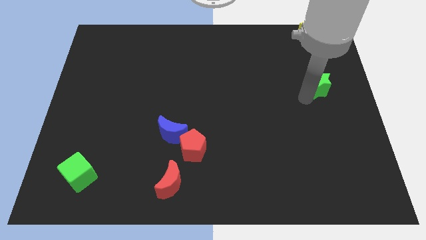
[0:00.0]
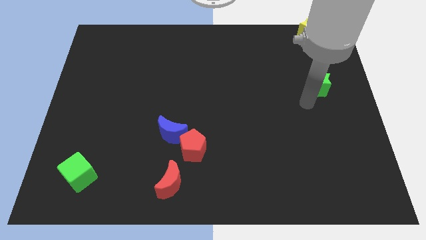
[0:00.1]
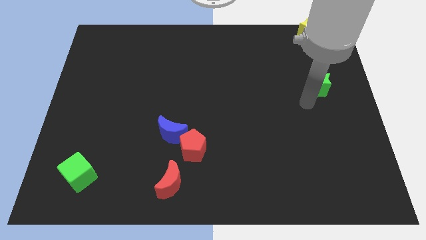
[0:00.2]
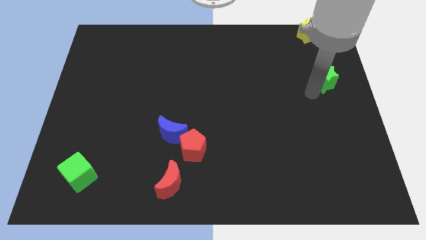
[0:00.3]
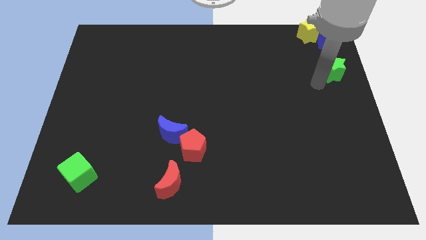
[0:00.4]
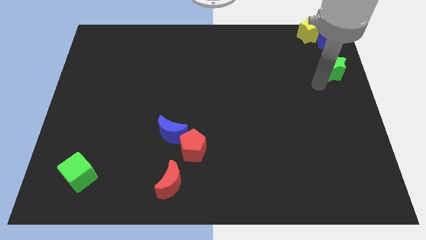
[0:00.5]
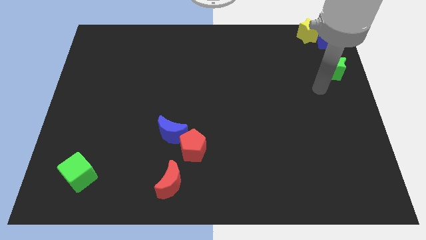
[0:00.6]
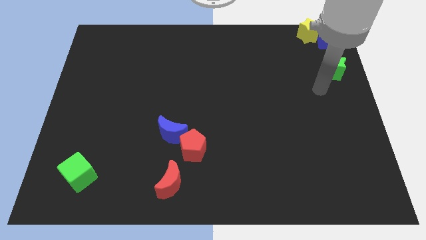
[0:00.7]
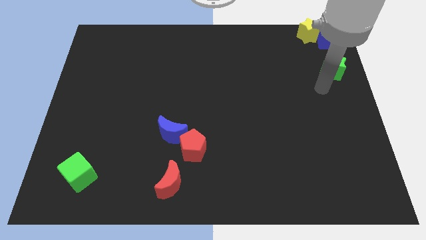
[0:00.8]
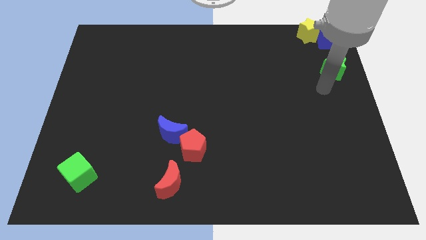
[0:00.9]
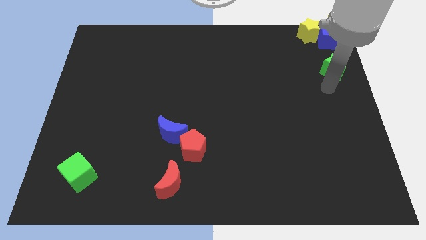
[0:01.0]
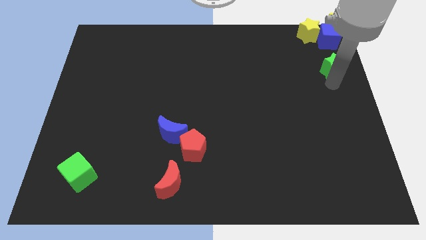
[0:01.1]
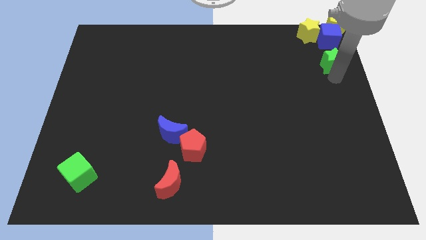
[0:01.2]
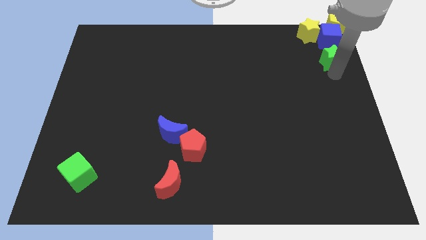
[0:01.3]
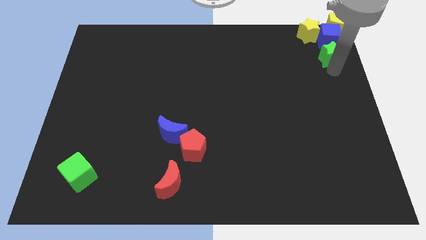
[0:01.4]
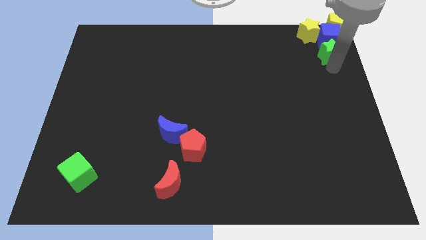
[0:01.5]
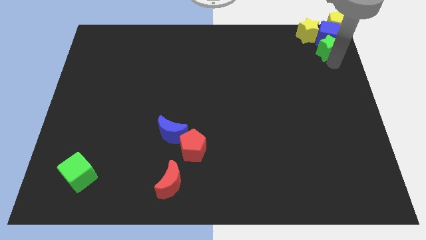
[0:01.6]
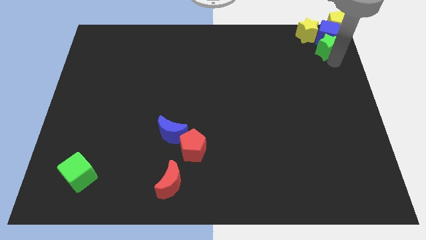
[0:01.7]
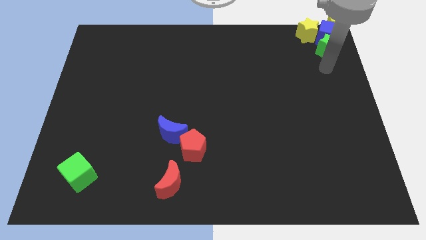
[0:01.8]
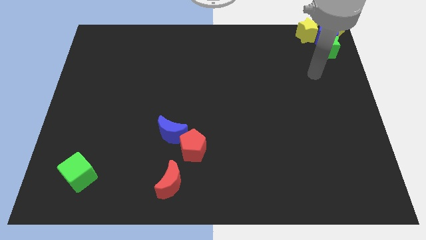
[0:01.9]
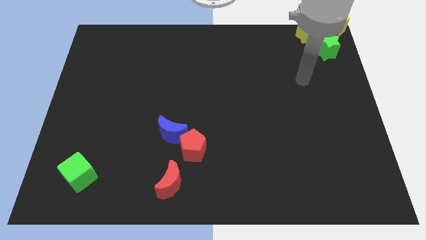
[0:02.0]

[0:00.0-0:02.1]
push the green star into the blue cube

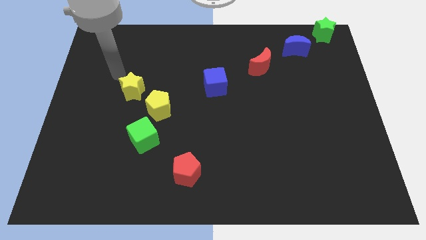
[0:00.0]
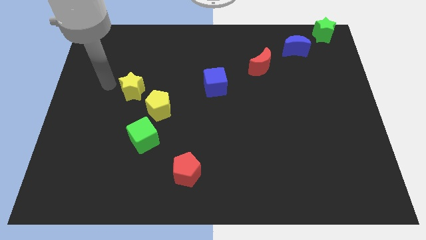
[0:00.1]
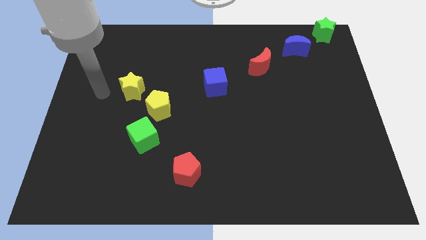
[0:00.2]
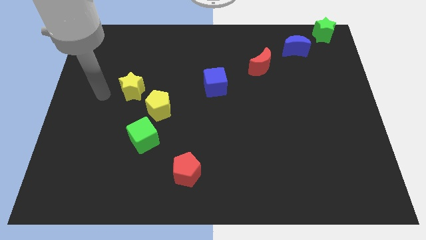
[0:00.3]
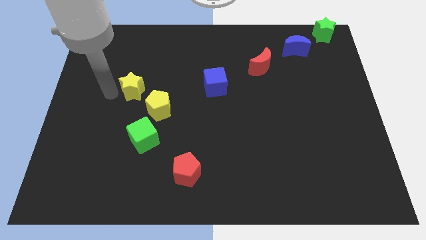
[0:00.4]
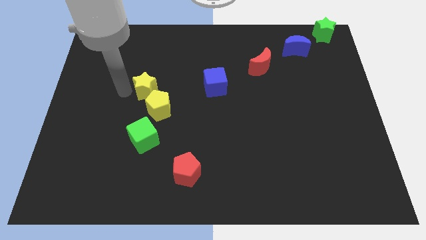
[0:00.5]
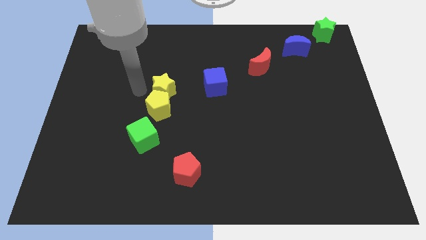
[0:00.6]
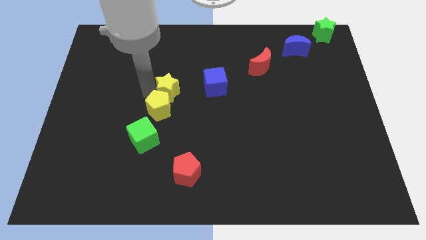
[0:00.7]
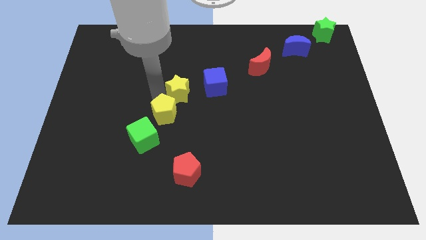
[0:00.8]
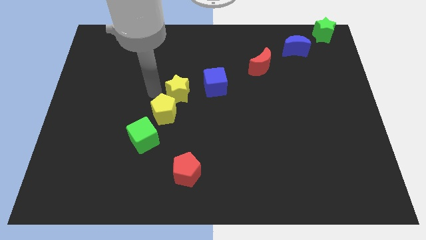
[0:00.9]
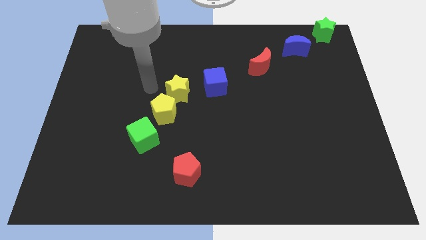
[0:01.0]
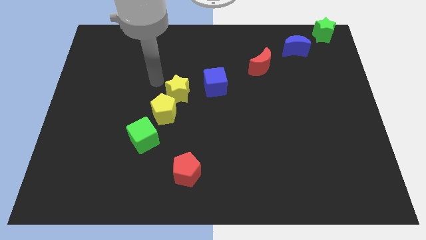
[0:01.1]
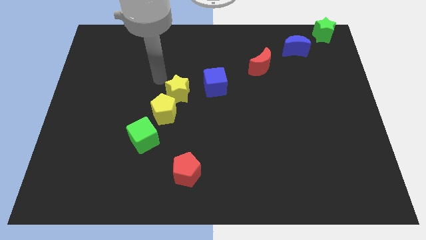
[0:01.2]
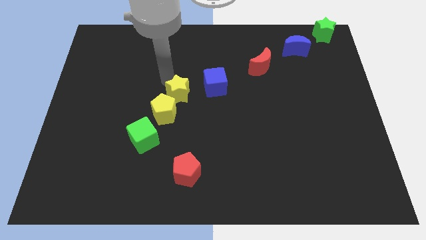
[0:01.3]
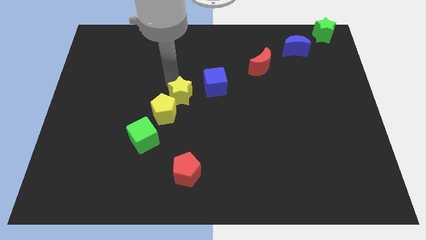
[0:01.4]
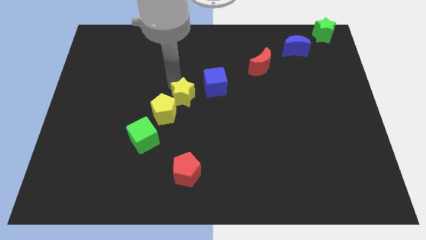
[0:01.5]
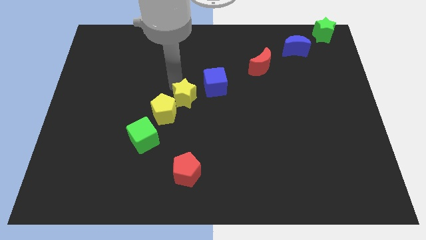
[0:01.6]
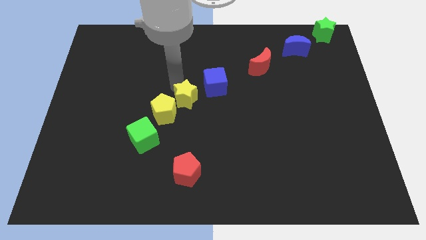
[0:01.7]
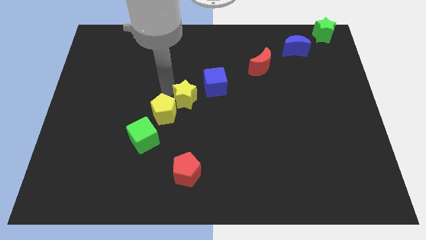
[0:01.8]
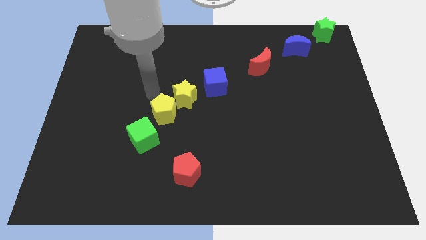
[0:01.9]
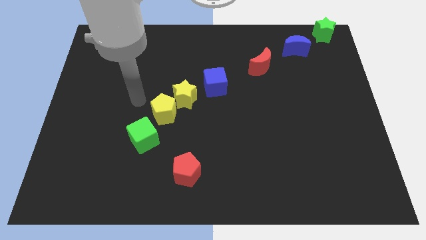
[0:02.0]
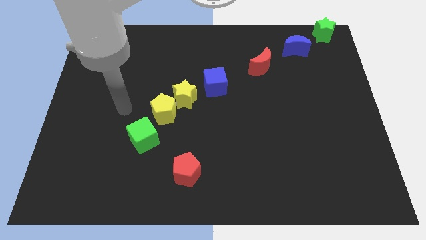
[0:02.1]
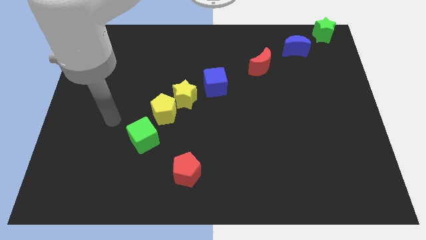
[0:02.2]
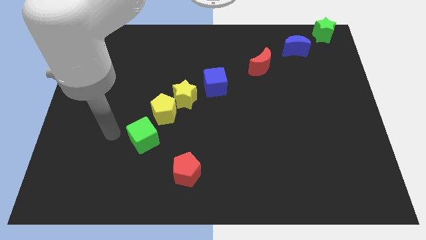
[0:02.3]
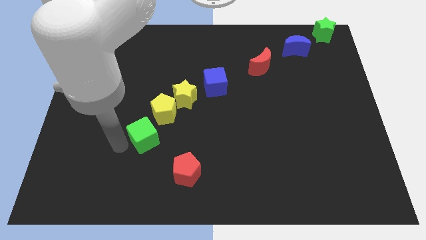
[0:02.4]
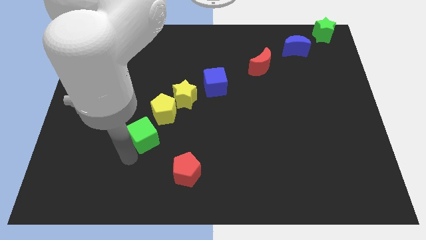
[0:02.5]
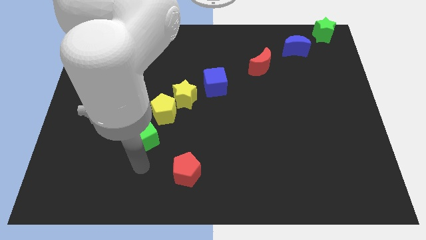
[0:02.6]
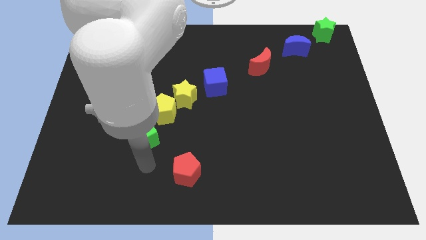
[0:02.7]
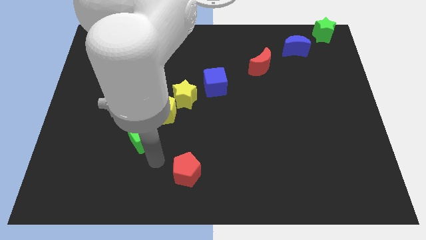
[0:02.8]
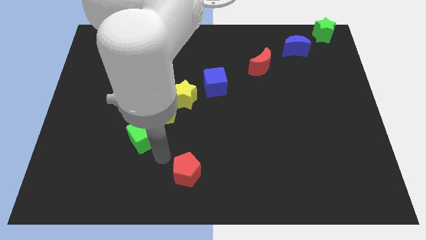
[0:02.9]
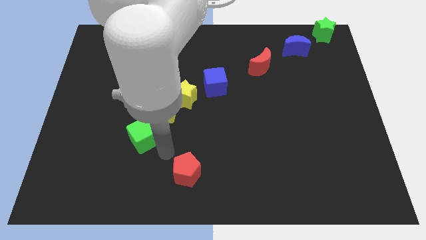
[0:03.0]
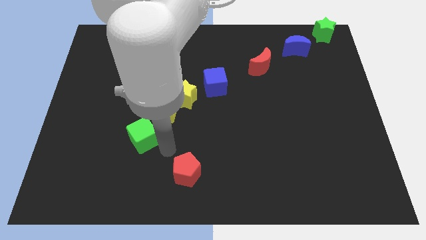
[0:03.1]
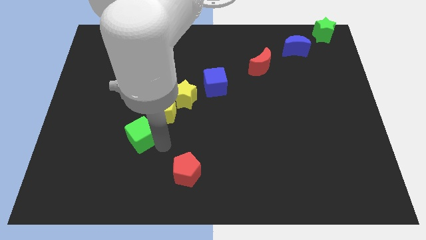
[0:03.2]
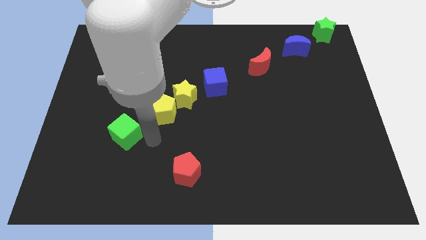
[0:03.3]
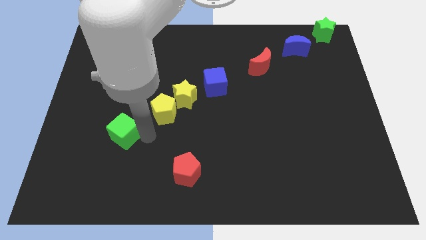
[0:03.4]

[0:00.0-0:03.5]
place the yellow pentagon diagonally below to the yellow star

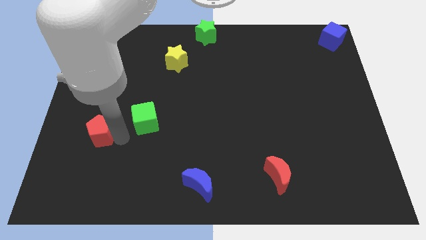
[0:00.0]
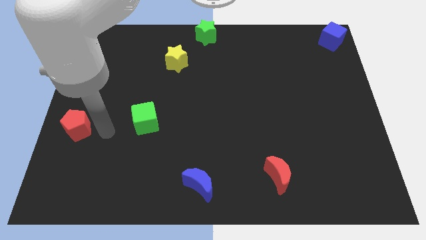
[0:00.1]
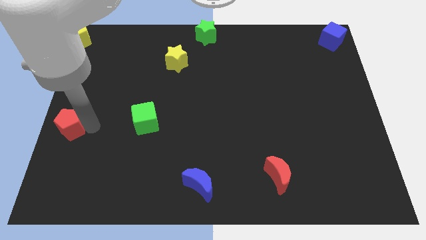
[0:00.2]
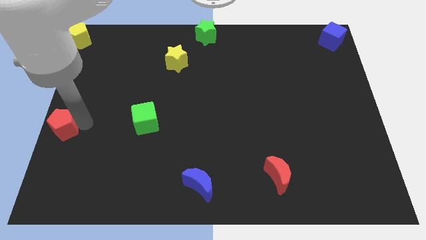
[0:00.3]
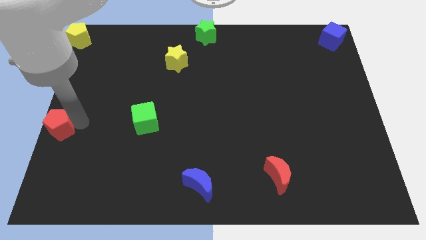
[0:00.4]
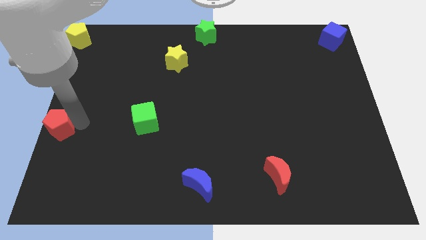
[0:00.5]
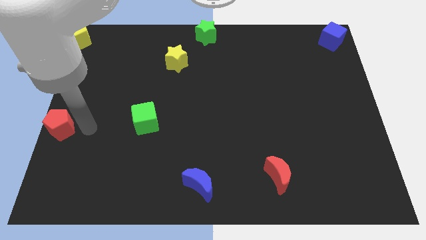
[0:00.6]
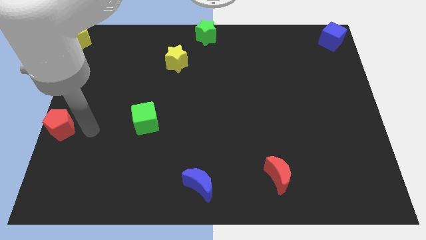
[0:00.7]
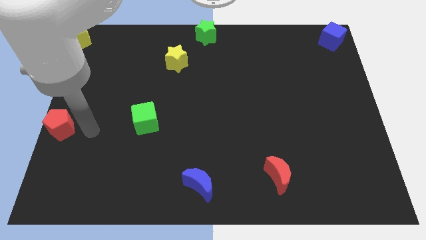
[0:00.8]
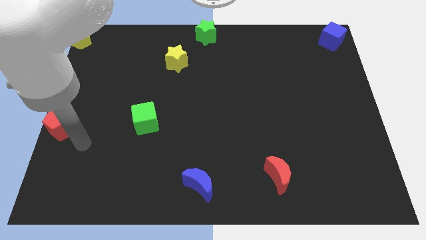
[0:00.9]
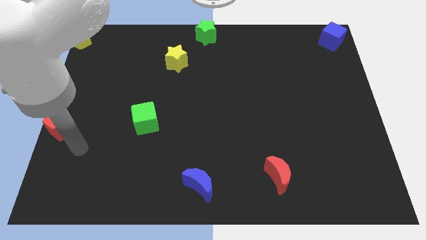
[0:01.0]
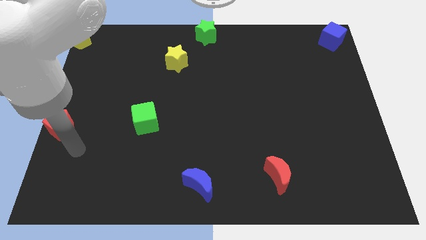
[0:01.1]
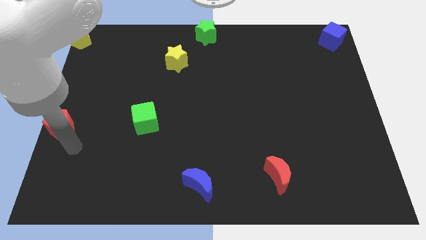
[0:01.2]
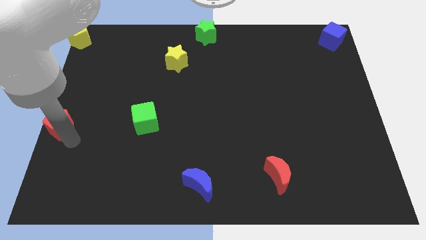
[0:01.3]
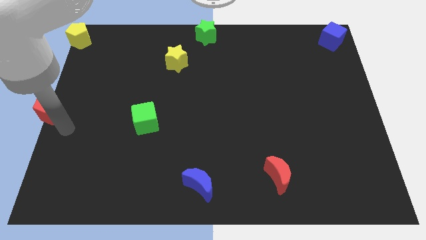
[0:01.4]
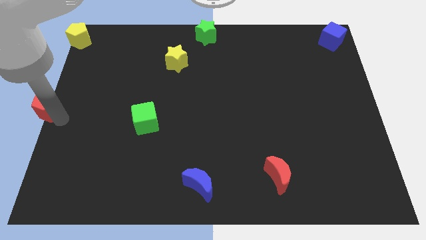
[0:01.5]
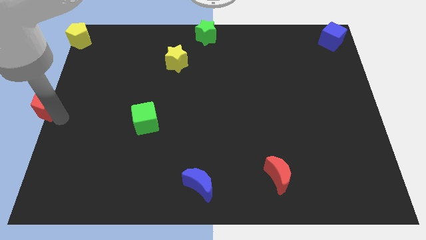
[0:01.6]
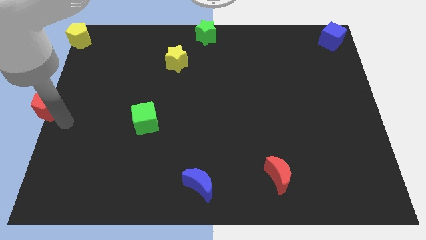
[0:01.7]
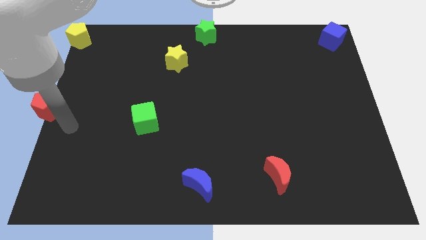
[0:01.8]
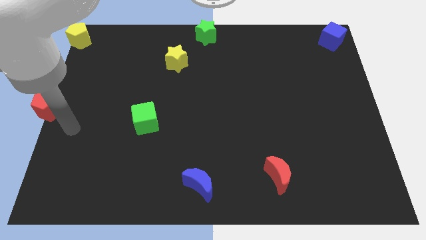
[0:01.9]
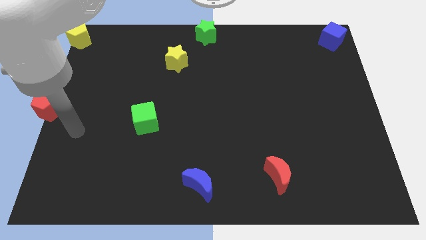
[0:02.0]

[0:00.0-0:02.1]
place the red pentagon towards the center left

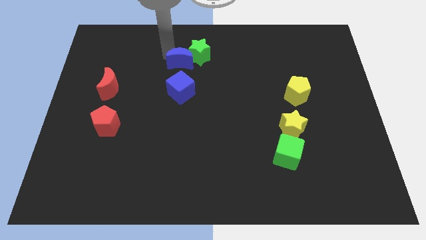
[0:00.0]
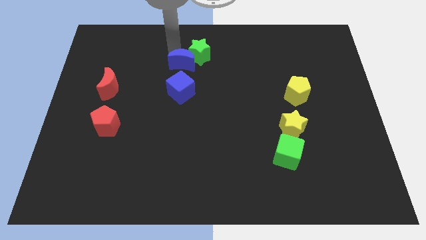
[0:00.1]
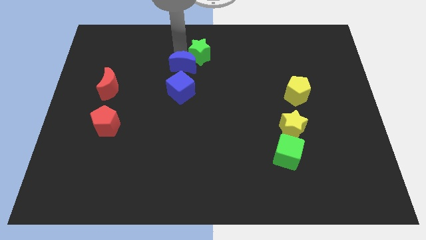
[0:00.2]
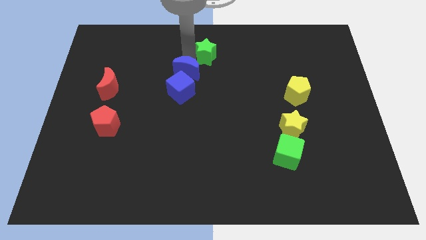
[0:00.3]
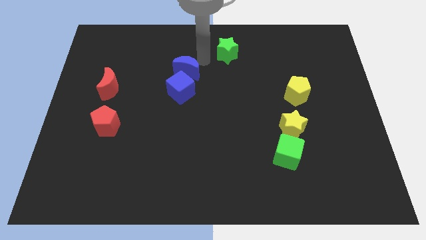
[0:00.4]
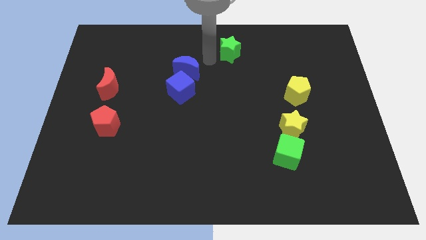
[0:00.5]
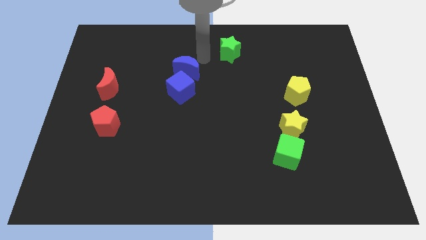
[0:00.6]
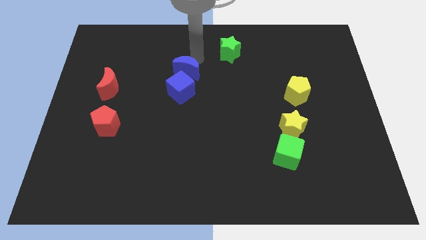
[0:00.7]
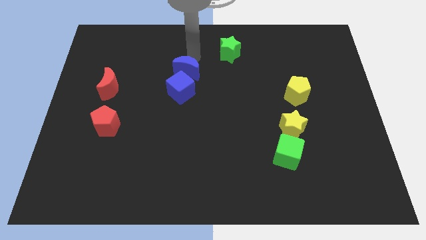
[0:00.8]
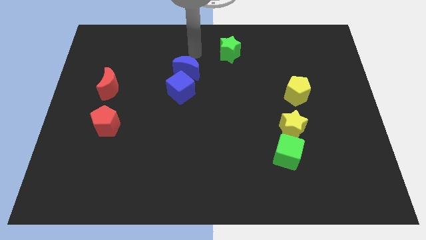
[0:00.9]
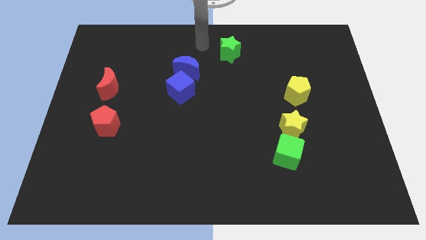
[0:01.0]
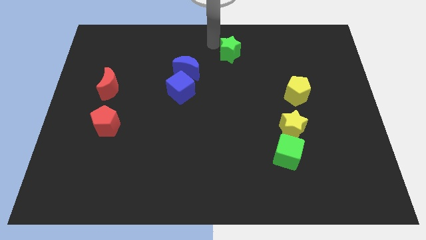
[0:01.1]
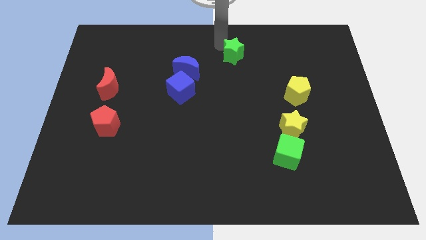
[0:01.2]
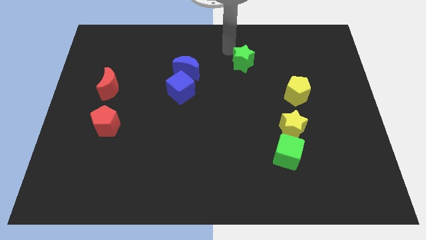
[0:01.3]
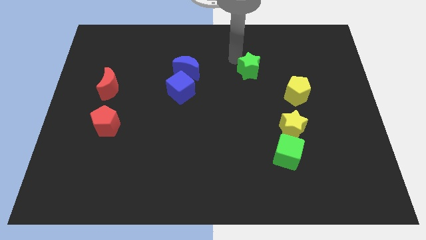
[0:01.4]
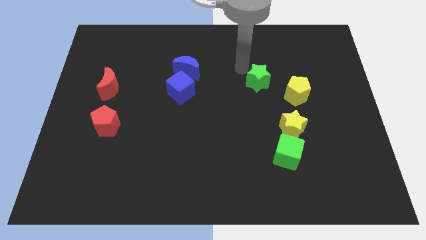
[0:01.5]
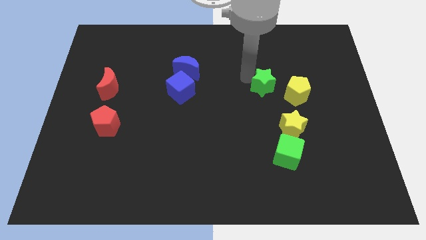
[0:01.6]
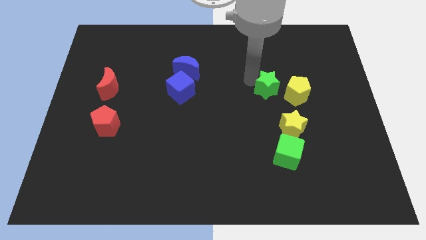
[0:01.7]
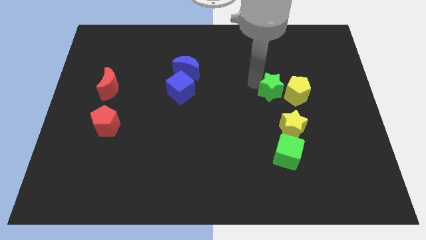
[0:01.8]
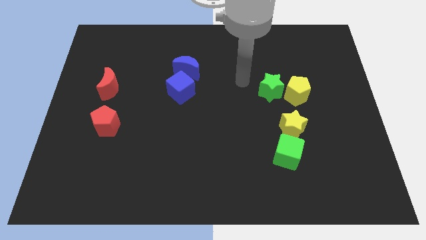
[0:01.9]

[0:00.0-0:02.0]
move the green star towards the left side of the yellow pentagon
